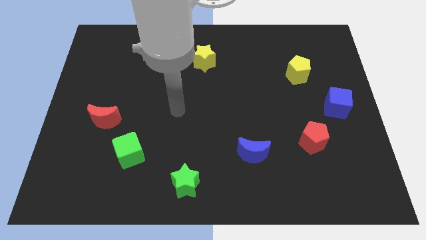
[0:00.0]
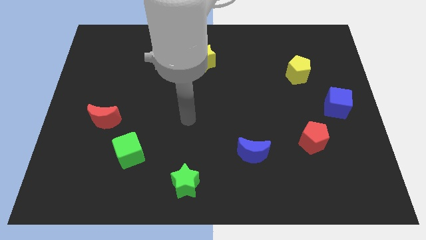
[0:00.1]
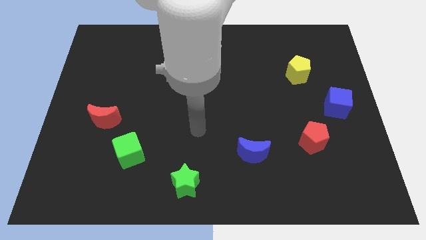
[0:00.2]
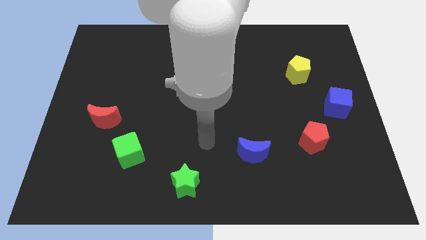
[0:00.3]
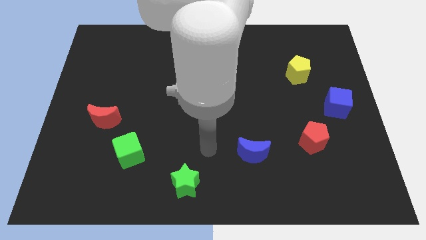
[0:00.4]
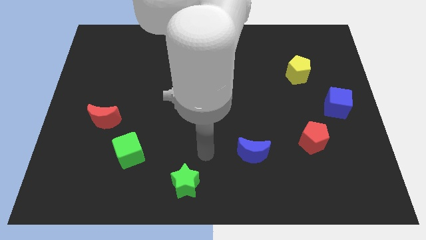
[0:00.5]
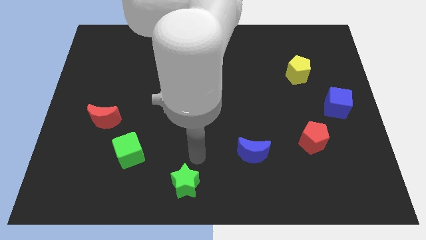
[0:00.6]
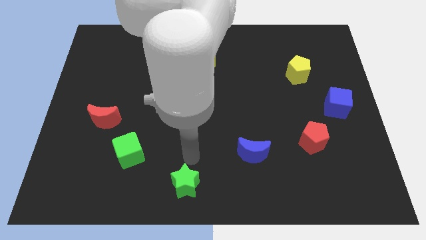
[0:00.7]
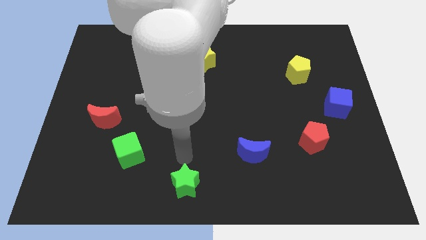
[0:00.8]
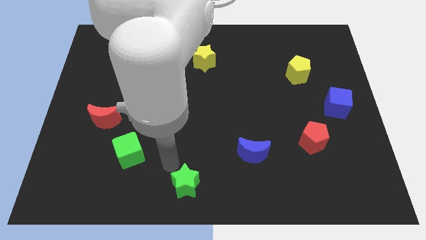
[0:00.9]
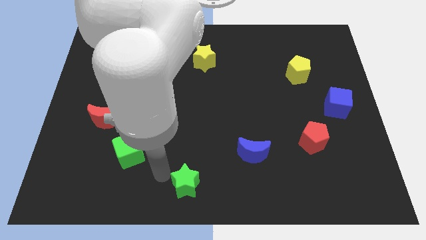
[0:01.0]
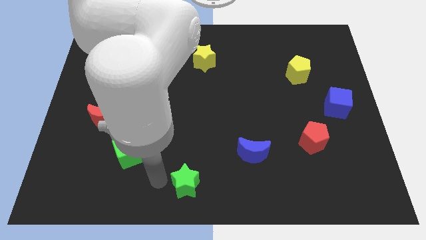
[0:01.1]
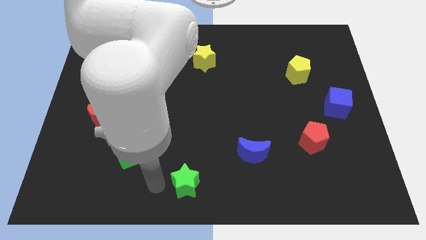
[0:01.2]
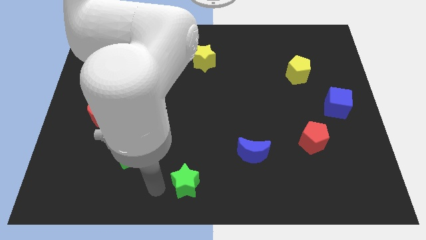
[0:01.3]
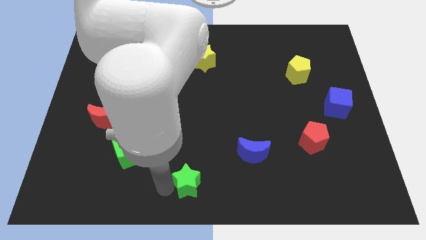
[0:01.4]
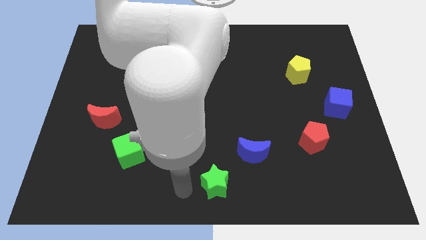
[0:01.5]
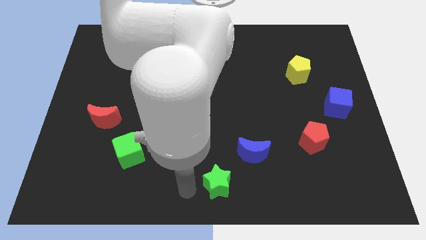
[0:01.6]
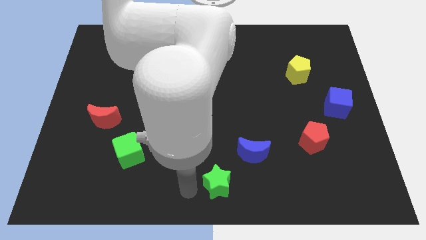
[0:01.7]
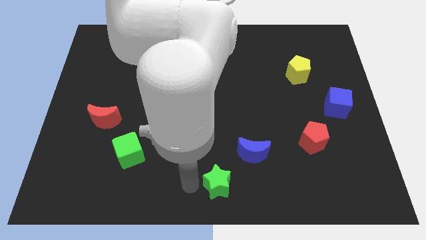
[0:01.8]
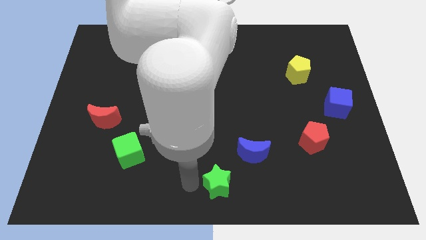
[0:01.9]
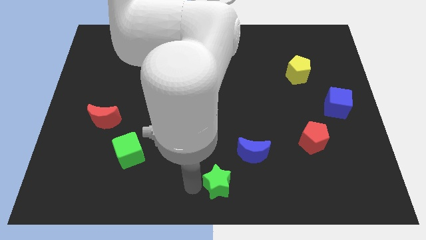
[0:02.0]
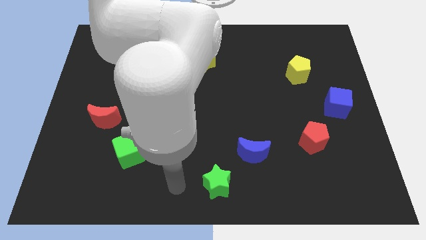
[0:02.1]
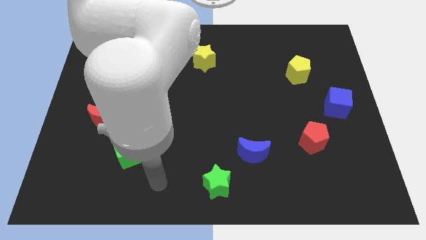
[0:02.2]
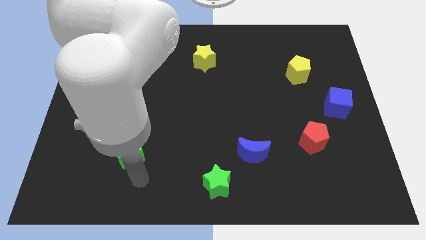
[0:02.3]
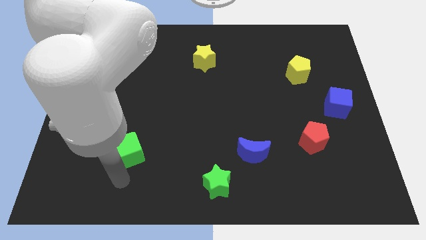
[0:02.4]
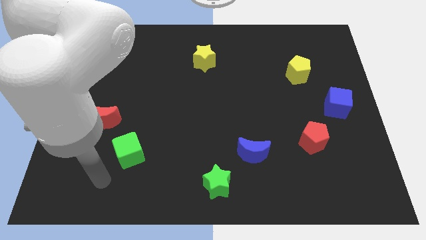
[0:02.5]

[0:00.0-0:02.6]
move the green star slightly to the right

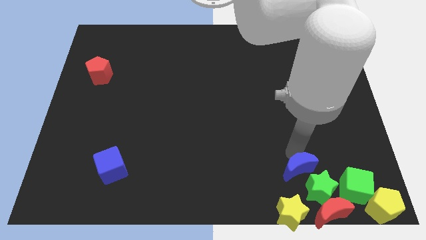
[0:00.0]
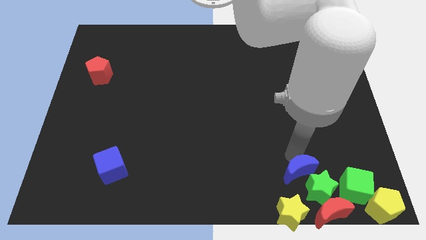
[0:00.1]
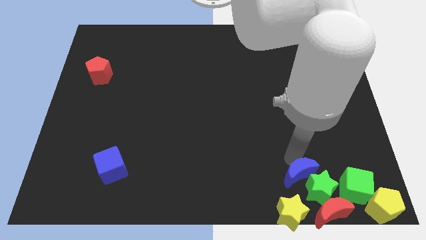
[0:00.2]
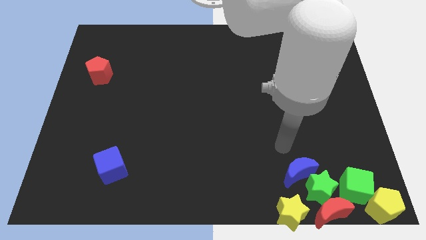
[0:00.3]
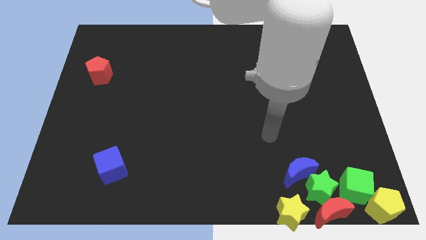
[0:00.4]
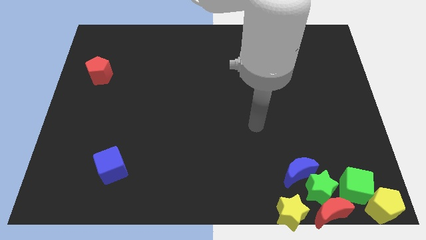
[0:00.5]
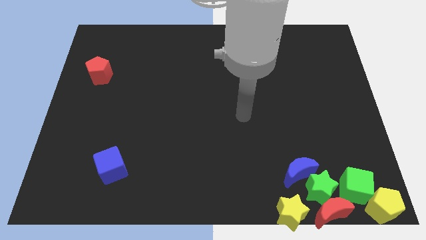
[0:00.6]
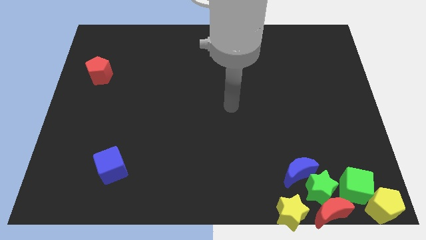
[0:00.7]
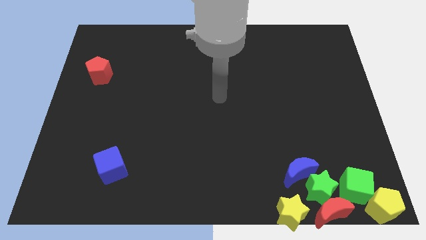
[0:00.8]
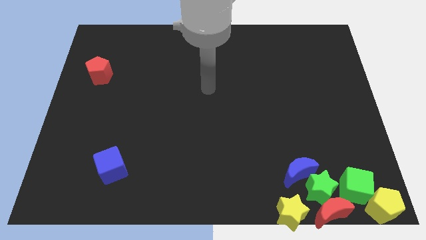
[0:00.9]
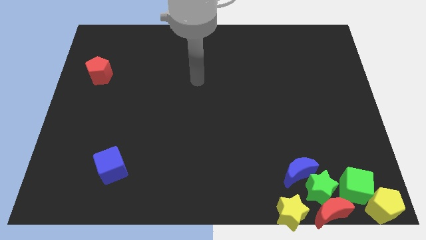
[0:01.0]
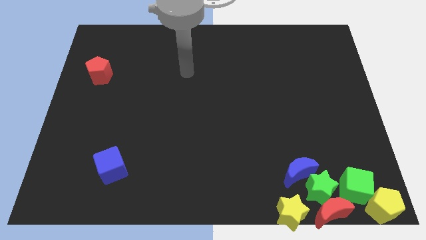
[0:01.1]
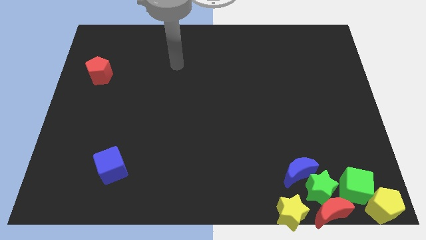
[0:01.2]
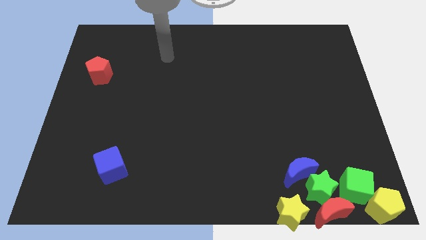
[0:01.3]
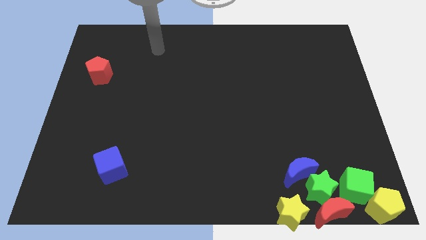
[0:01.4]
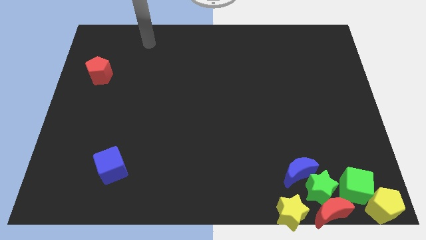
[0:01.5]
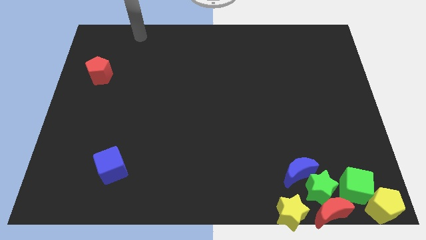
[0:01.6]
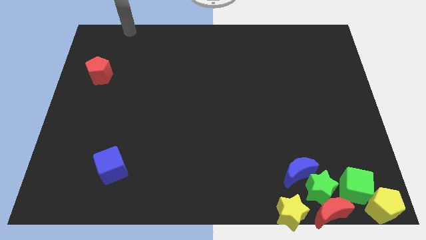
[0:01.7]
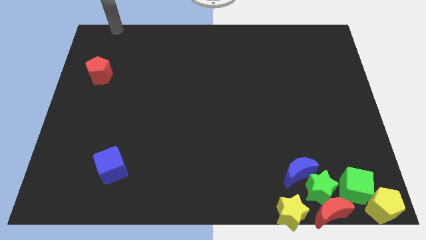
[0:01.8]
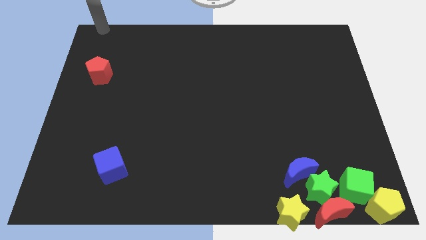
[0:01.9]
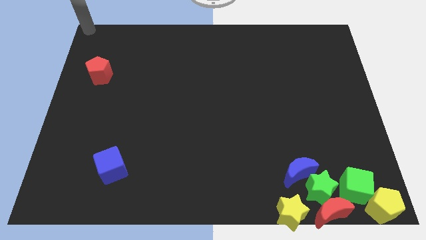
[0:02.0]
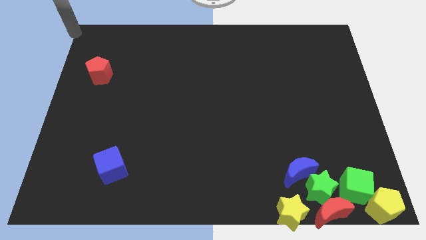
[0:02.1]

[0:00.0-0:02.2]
move yourself away from the blue semi circle

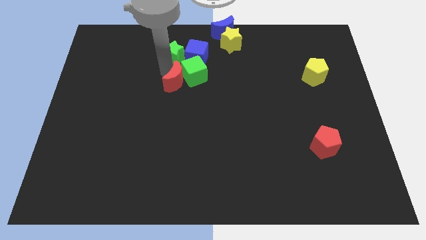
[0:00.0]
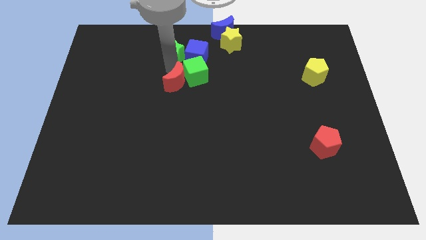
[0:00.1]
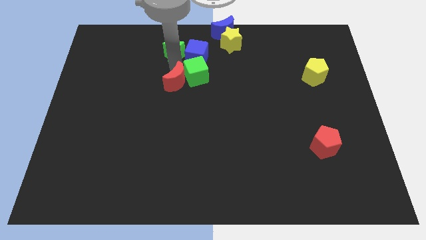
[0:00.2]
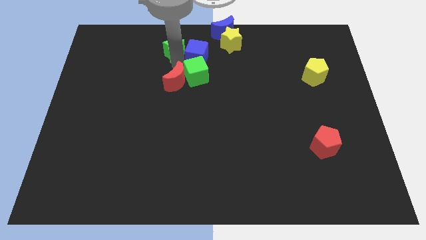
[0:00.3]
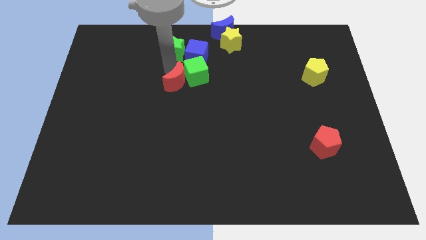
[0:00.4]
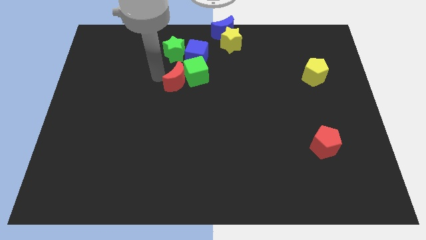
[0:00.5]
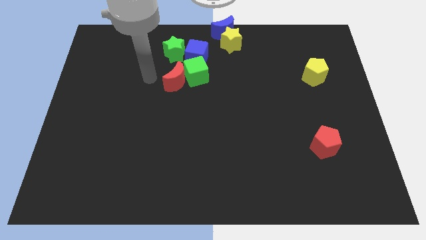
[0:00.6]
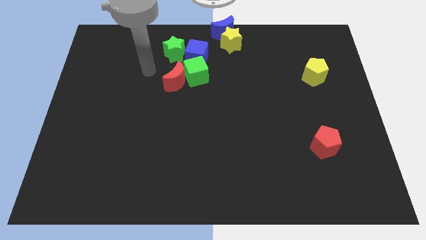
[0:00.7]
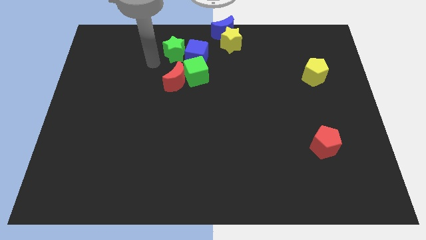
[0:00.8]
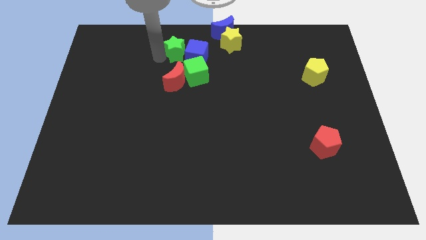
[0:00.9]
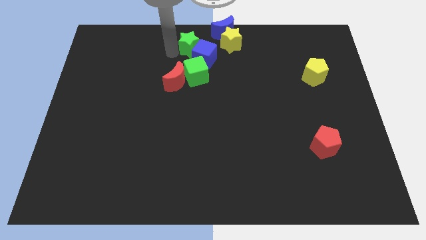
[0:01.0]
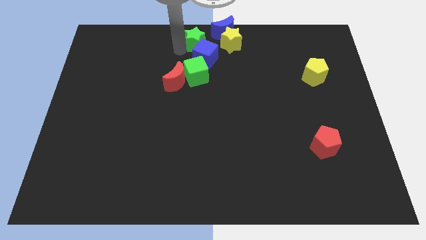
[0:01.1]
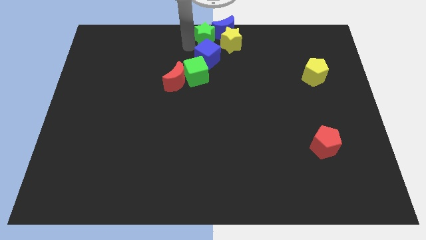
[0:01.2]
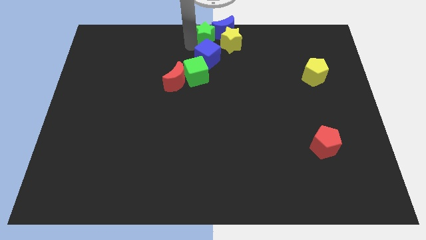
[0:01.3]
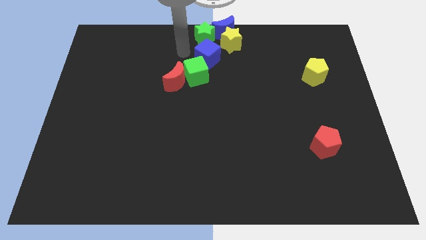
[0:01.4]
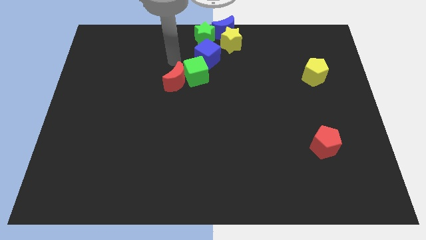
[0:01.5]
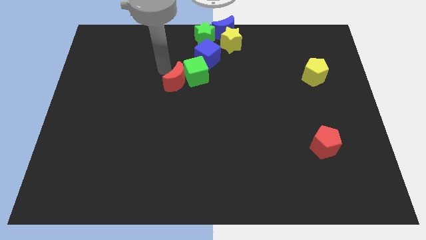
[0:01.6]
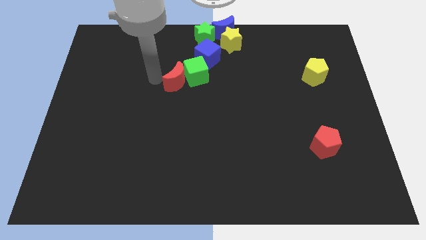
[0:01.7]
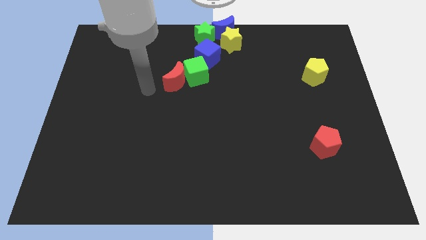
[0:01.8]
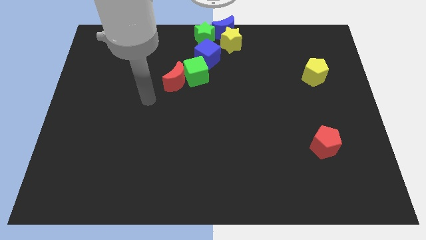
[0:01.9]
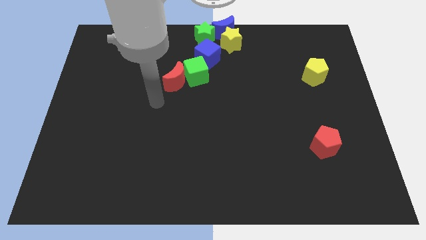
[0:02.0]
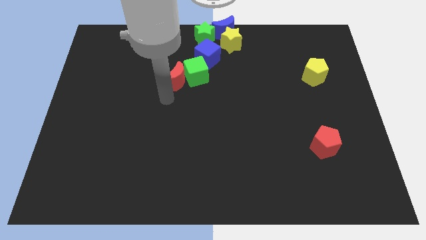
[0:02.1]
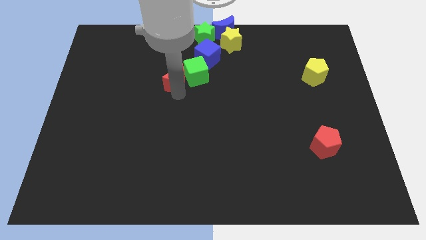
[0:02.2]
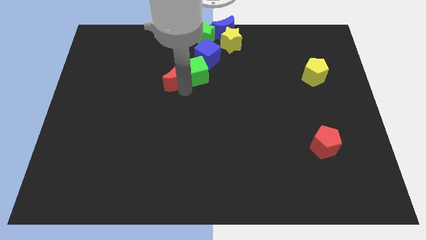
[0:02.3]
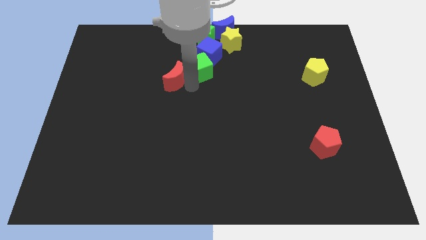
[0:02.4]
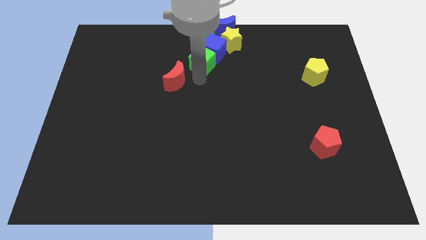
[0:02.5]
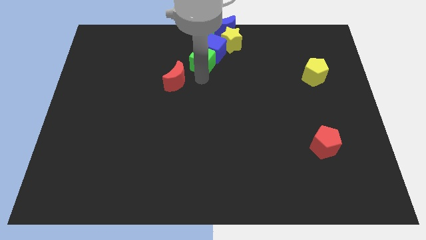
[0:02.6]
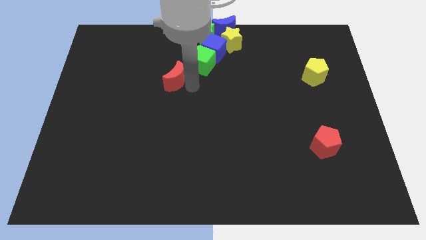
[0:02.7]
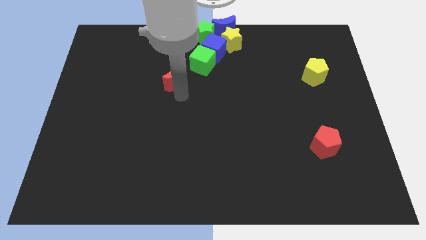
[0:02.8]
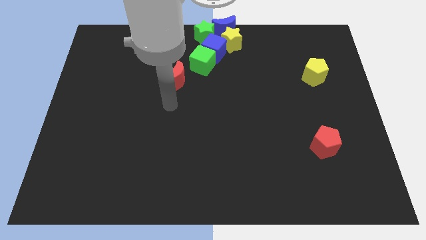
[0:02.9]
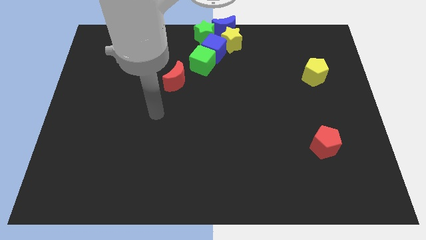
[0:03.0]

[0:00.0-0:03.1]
push the green star into the blue crescent towards the top center

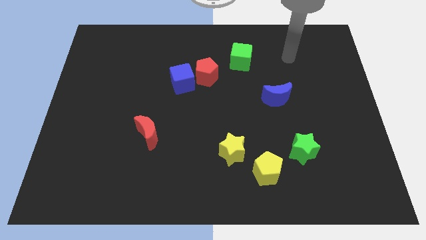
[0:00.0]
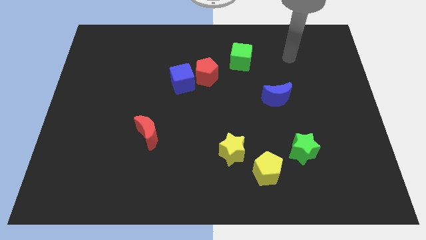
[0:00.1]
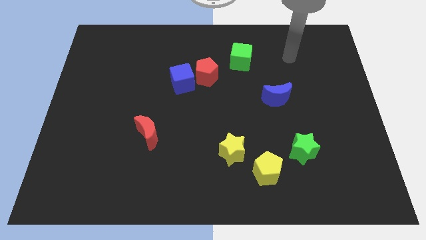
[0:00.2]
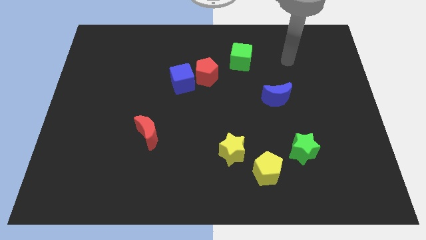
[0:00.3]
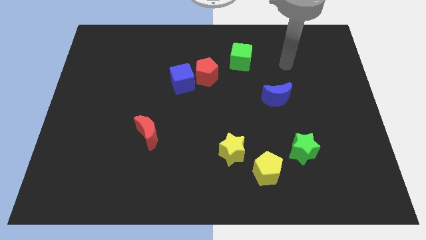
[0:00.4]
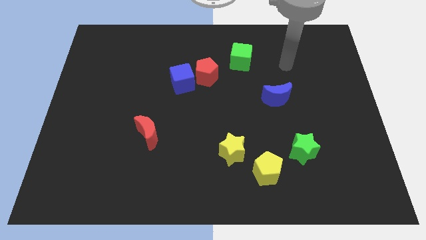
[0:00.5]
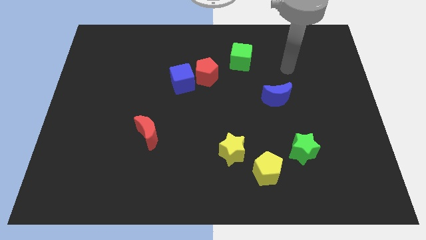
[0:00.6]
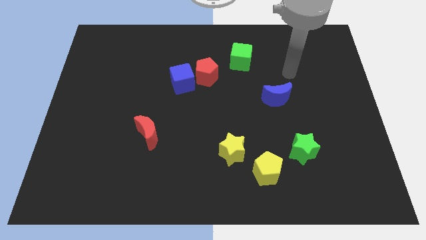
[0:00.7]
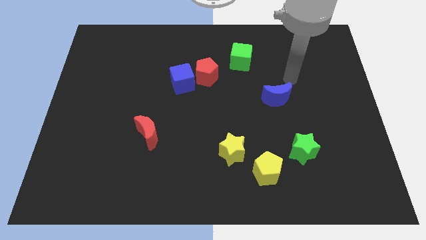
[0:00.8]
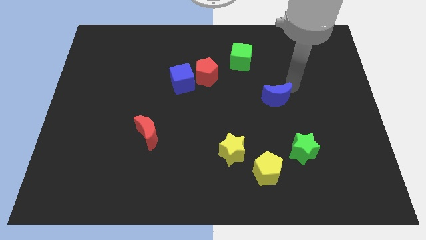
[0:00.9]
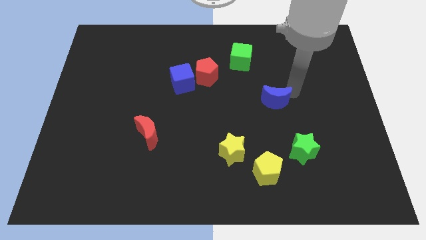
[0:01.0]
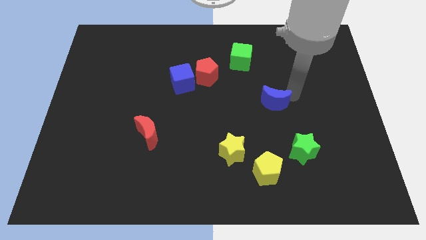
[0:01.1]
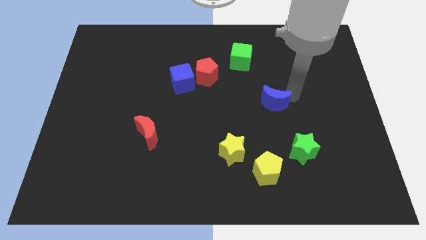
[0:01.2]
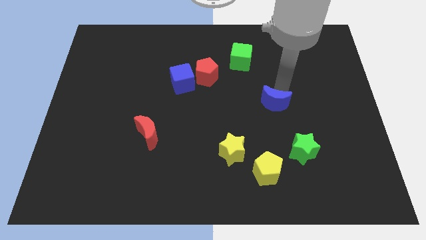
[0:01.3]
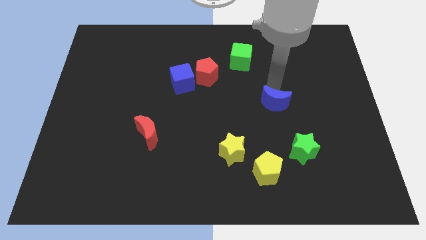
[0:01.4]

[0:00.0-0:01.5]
put your hand vertically above the blue moon
